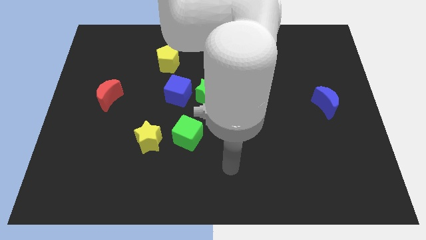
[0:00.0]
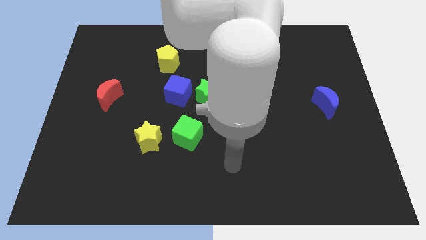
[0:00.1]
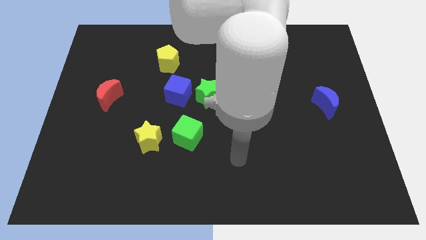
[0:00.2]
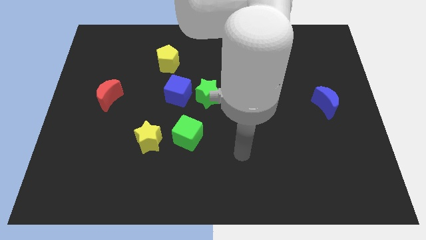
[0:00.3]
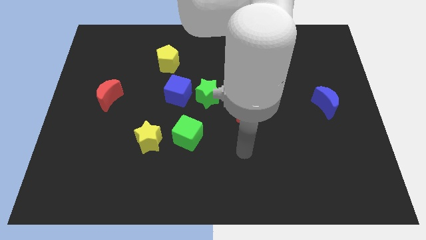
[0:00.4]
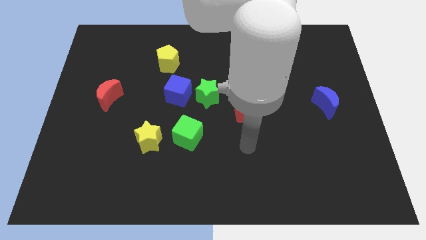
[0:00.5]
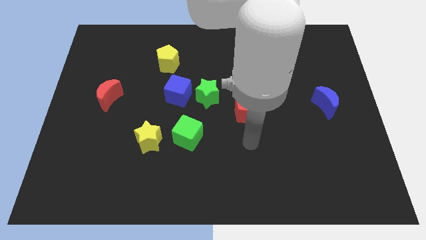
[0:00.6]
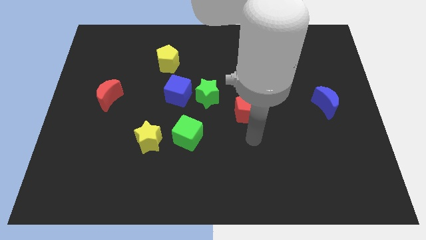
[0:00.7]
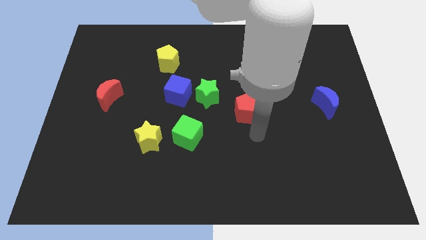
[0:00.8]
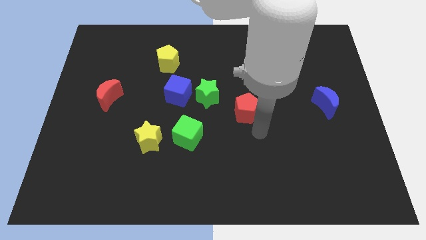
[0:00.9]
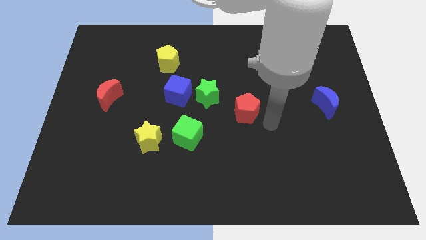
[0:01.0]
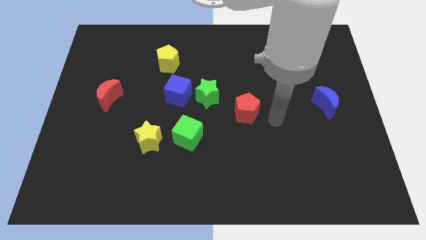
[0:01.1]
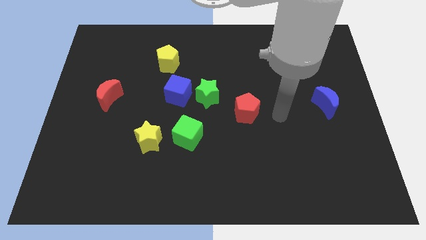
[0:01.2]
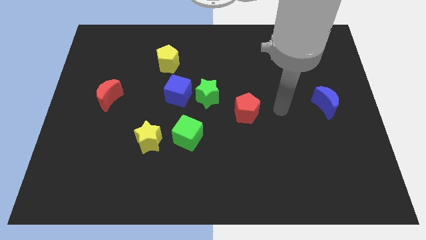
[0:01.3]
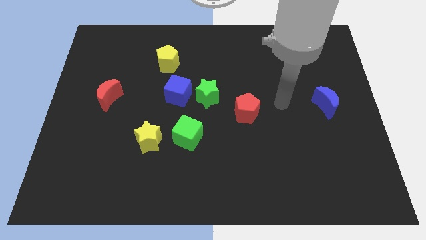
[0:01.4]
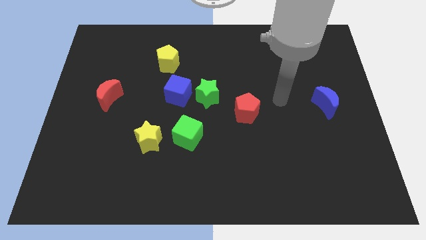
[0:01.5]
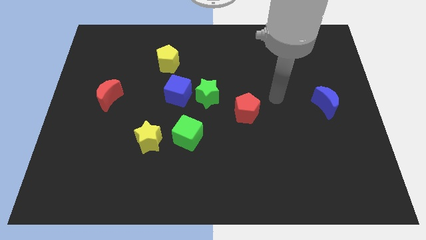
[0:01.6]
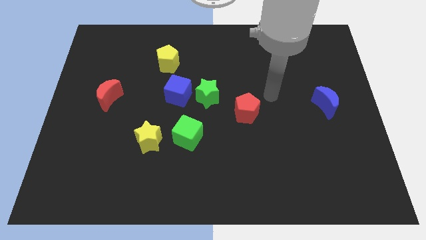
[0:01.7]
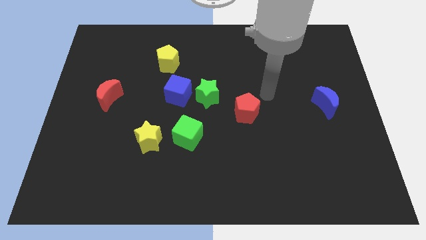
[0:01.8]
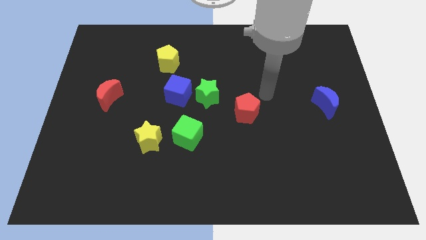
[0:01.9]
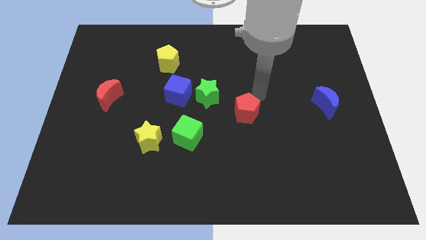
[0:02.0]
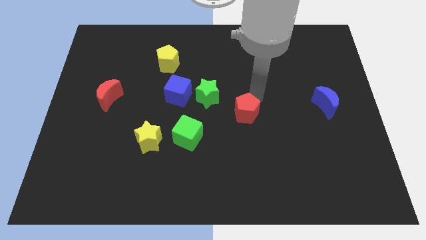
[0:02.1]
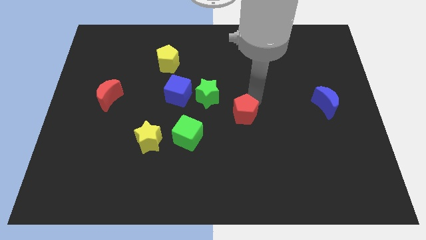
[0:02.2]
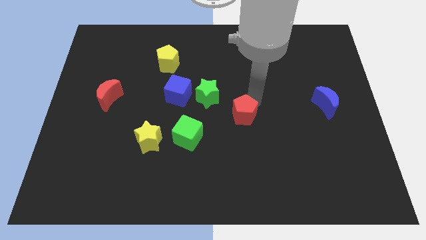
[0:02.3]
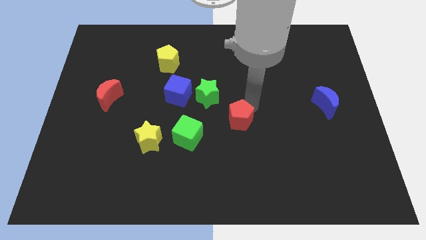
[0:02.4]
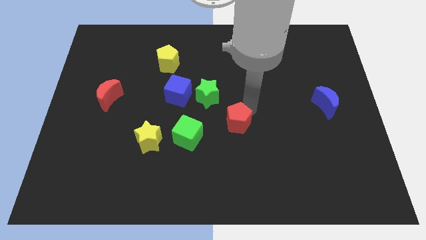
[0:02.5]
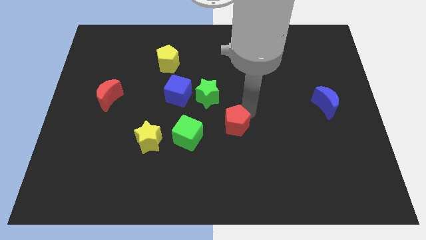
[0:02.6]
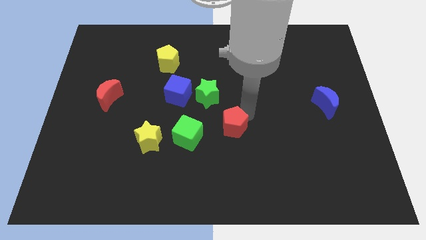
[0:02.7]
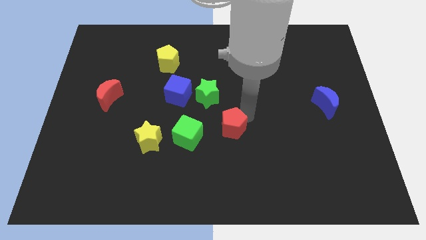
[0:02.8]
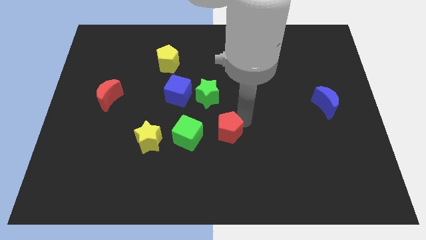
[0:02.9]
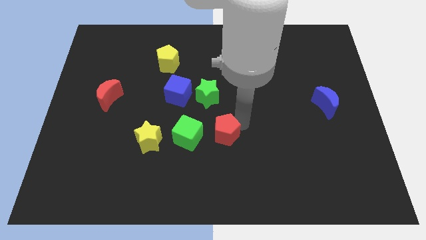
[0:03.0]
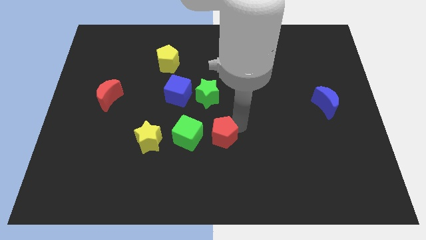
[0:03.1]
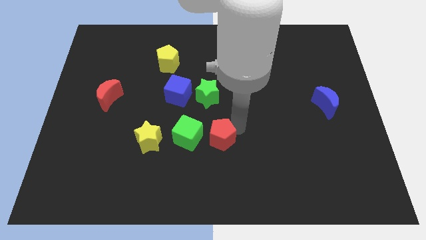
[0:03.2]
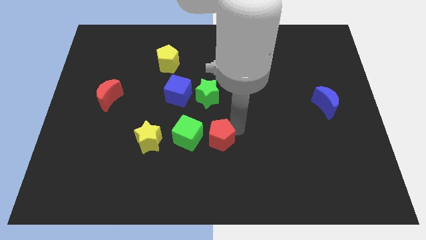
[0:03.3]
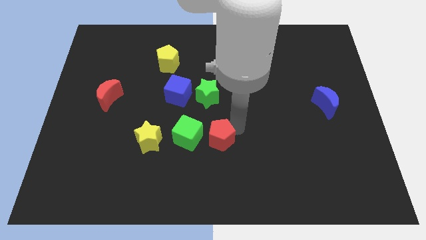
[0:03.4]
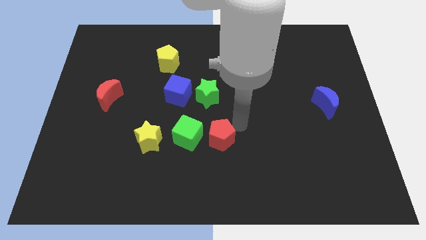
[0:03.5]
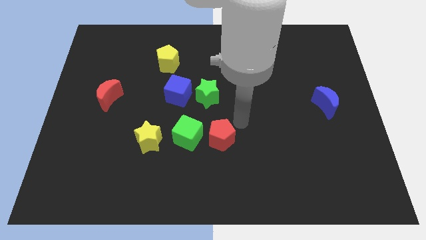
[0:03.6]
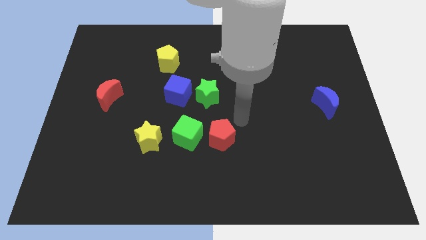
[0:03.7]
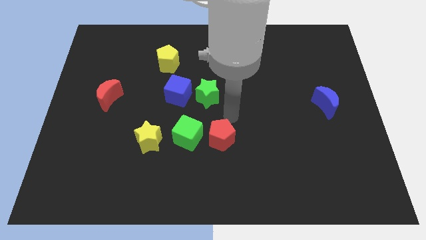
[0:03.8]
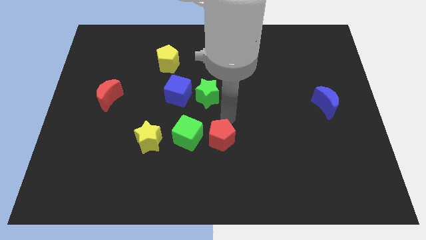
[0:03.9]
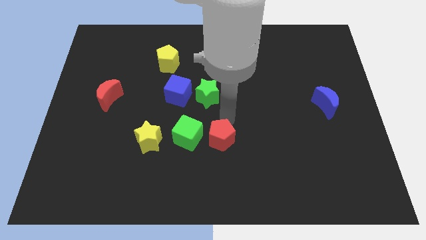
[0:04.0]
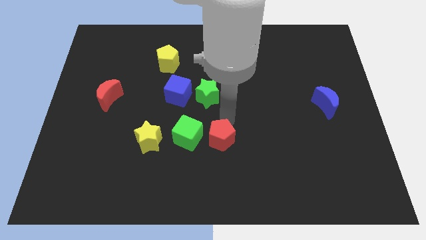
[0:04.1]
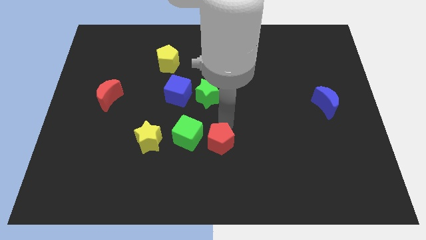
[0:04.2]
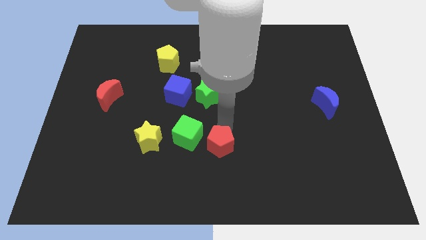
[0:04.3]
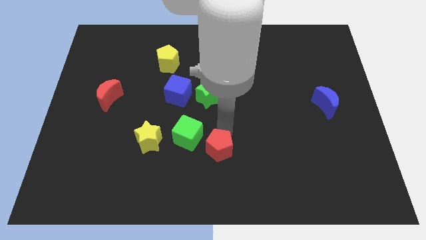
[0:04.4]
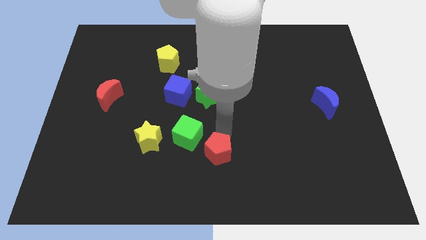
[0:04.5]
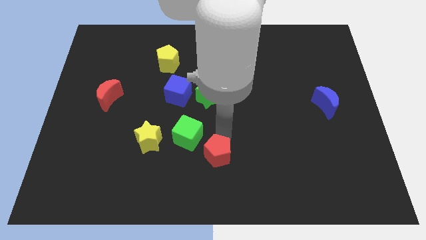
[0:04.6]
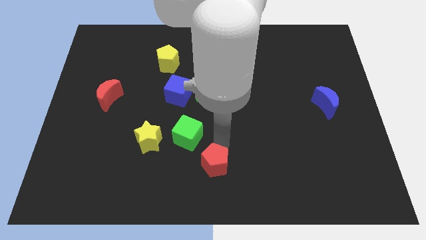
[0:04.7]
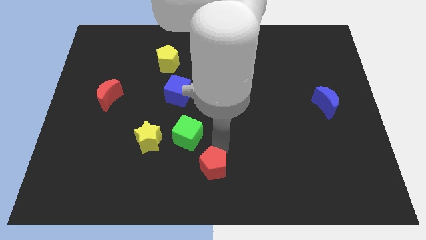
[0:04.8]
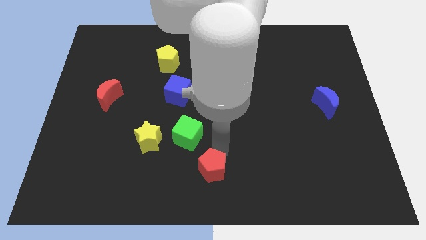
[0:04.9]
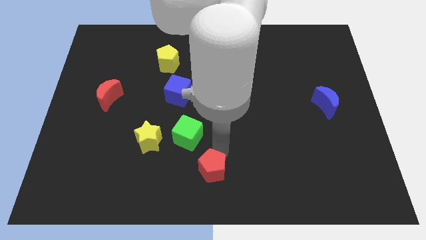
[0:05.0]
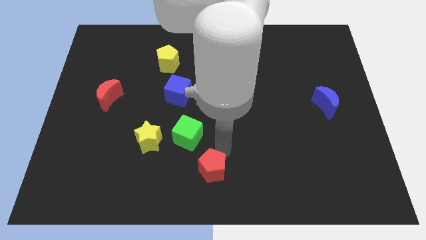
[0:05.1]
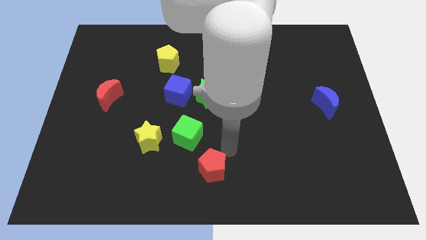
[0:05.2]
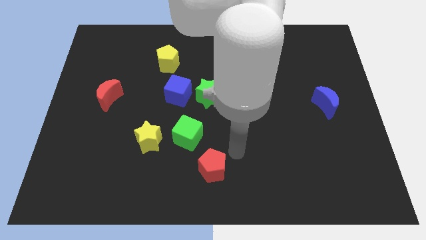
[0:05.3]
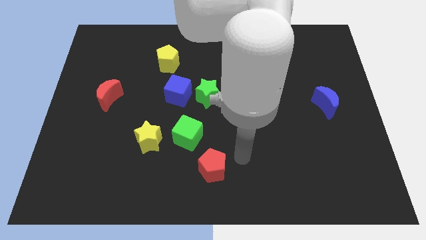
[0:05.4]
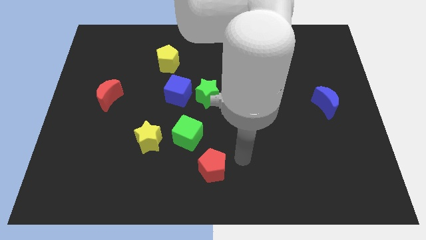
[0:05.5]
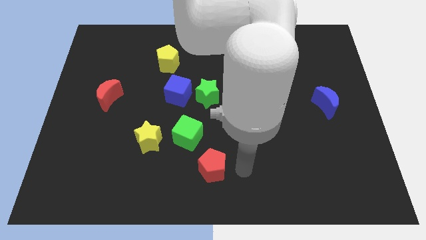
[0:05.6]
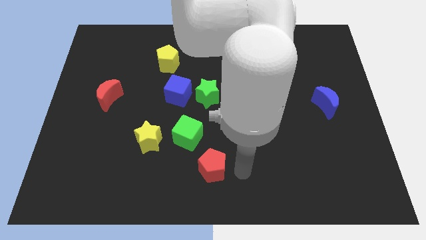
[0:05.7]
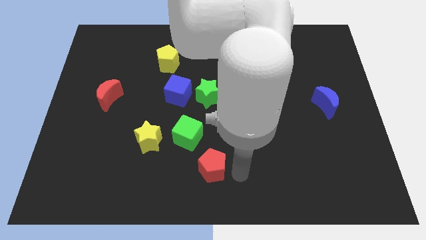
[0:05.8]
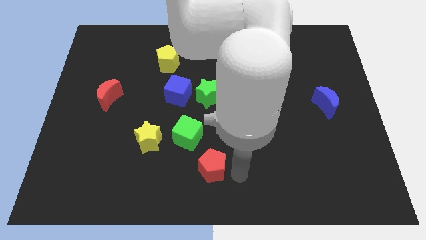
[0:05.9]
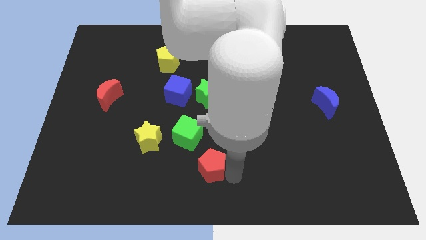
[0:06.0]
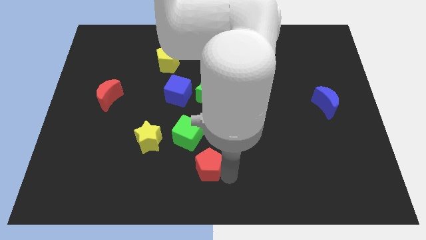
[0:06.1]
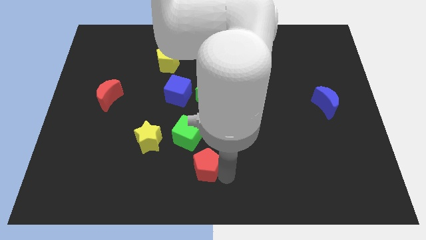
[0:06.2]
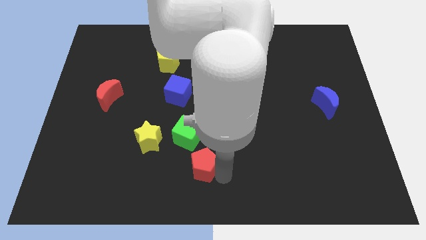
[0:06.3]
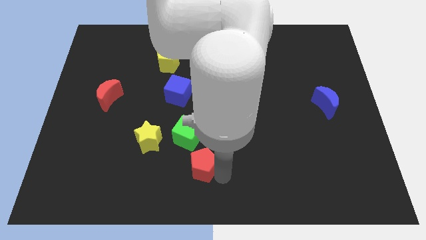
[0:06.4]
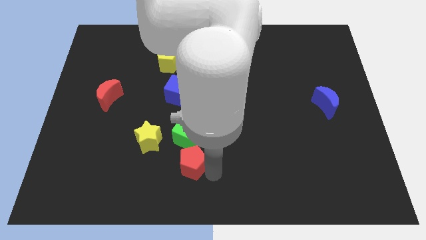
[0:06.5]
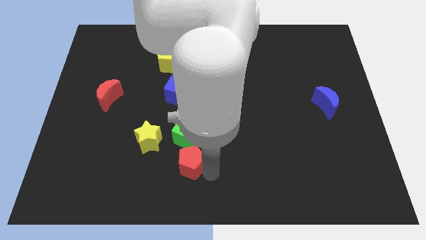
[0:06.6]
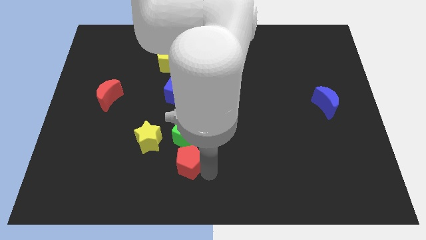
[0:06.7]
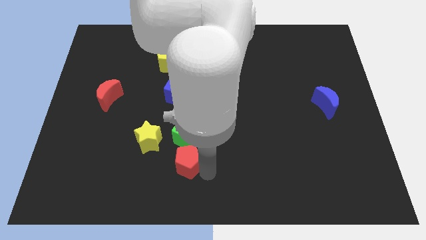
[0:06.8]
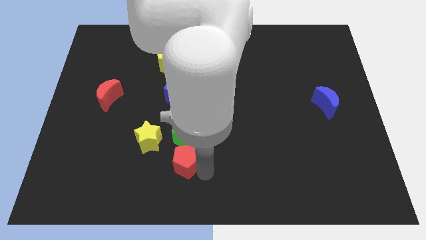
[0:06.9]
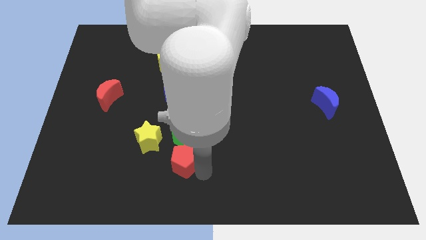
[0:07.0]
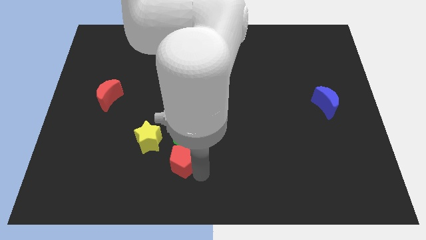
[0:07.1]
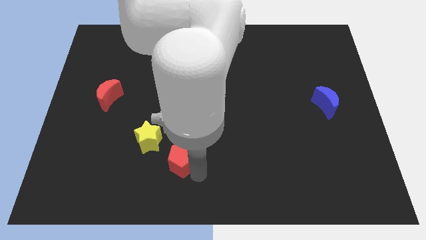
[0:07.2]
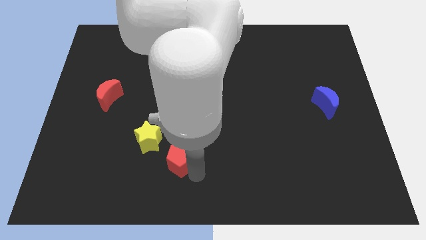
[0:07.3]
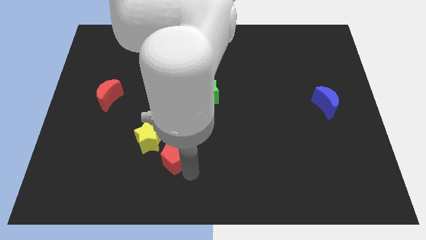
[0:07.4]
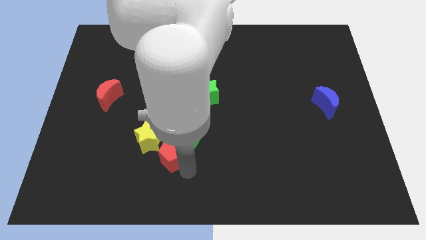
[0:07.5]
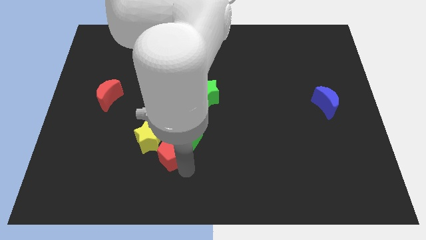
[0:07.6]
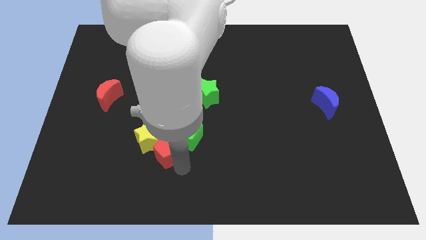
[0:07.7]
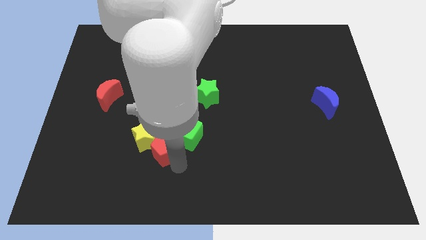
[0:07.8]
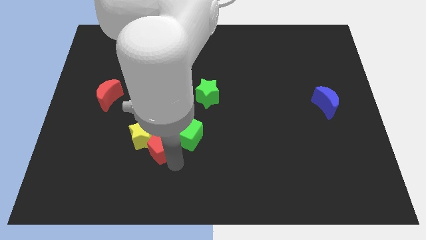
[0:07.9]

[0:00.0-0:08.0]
slide the red pentagon close to the yellow star

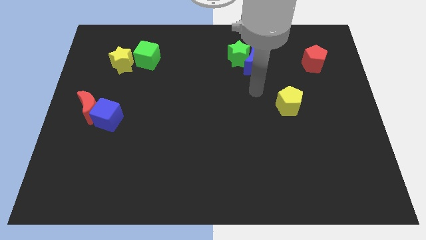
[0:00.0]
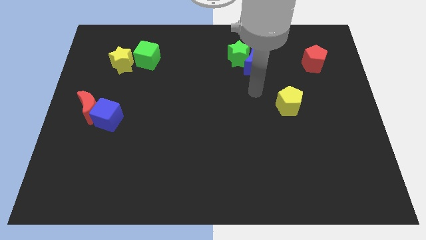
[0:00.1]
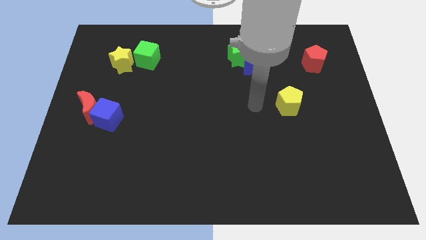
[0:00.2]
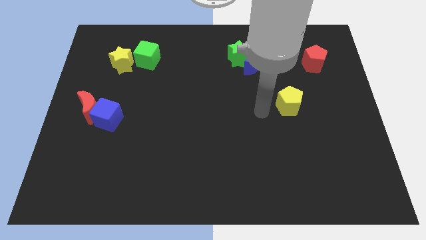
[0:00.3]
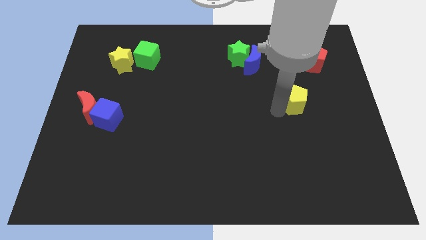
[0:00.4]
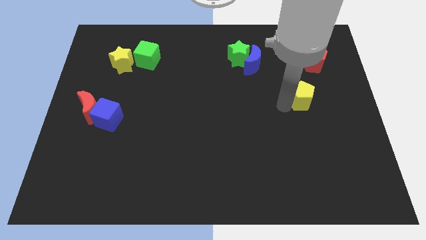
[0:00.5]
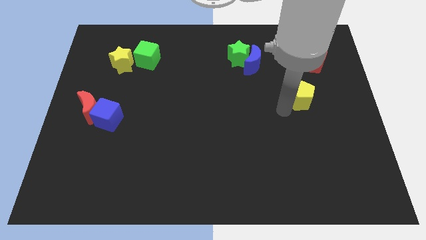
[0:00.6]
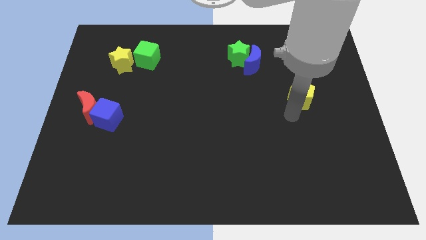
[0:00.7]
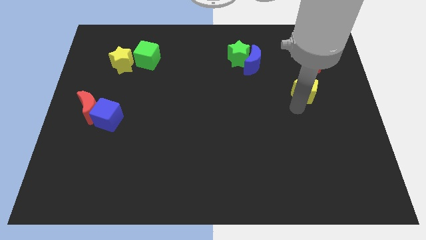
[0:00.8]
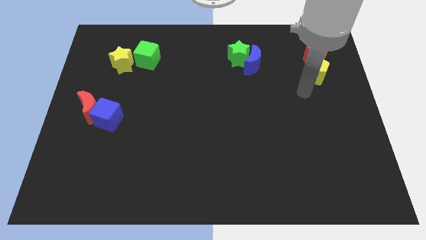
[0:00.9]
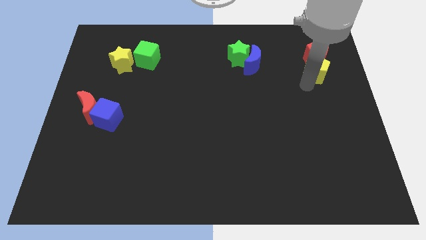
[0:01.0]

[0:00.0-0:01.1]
move the yellow pentagon close to the red pentagon
